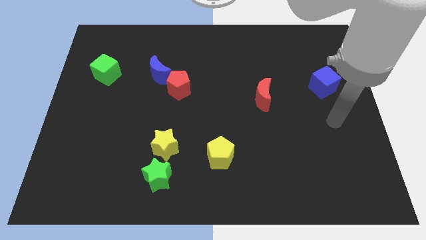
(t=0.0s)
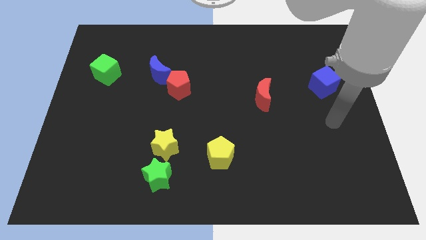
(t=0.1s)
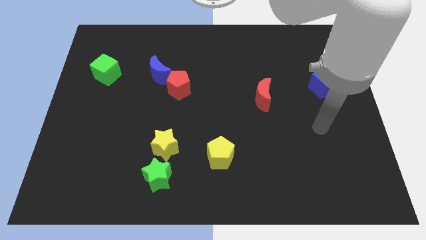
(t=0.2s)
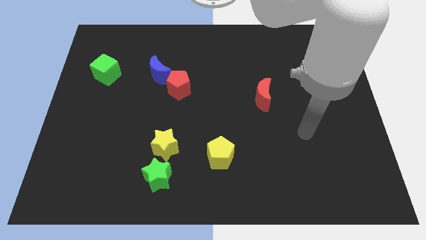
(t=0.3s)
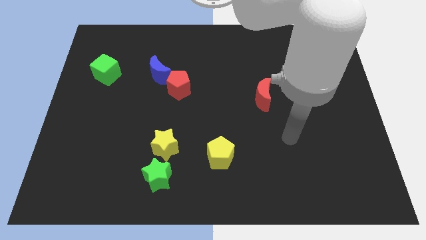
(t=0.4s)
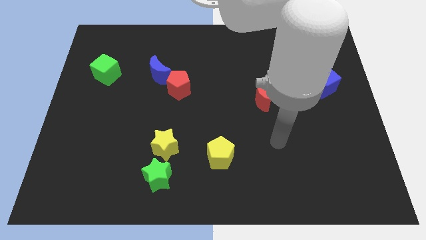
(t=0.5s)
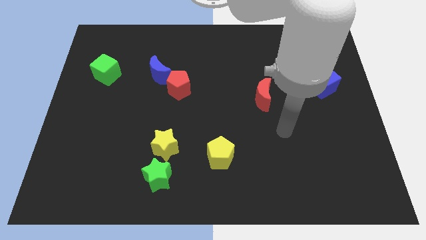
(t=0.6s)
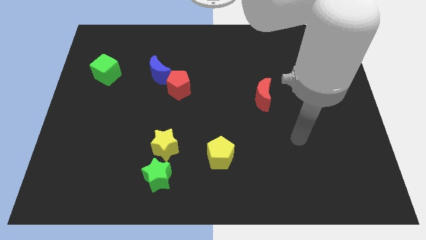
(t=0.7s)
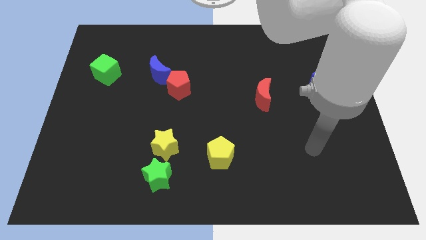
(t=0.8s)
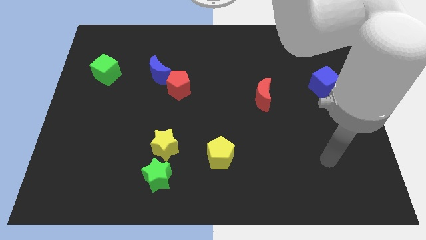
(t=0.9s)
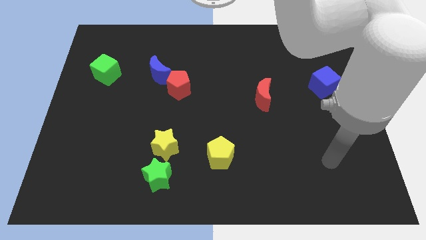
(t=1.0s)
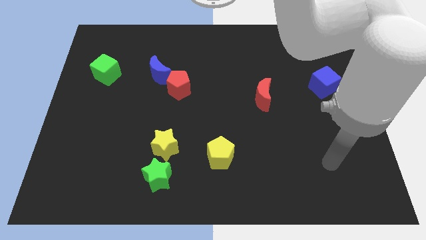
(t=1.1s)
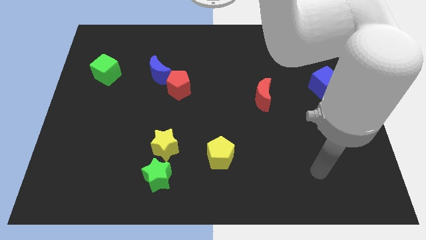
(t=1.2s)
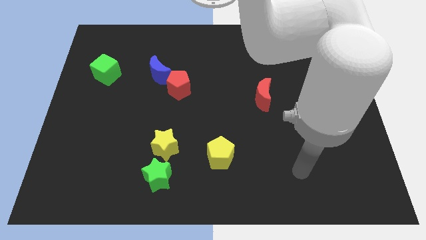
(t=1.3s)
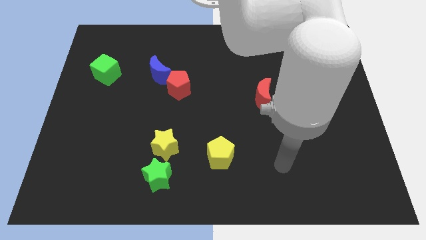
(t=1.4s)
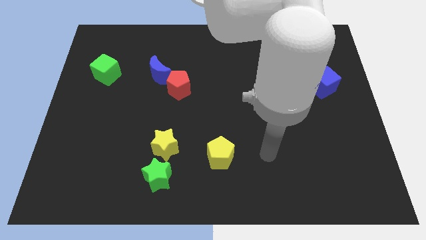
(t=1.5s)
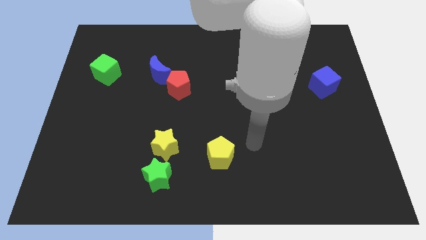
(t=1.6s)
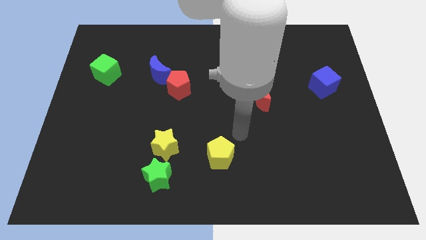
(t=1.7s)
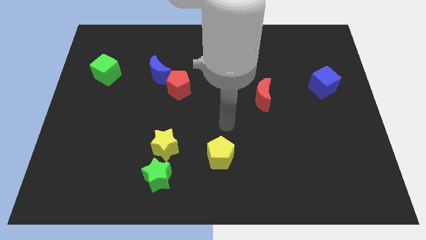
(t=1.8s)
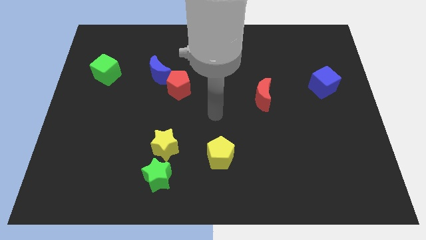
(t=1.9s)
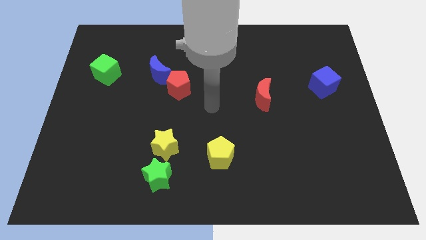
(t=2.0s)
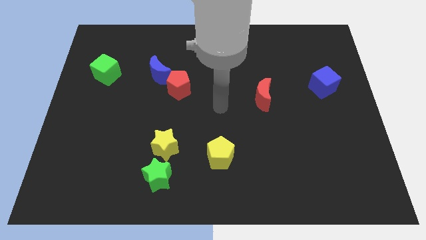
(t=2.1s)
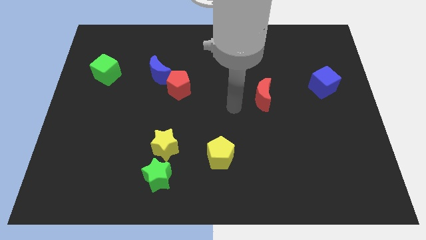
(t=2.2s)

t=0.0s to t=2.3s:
go and point your hand at the center of the board

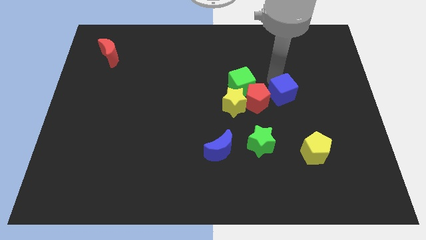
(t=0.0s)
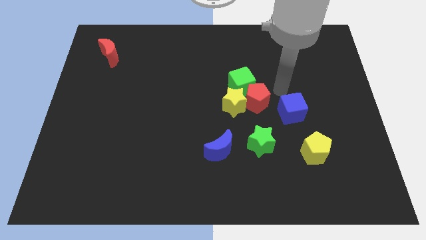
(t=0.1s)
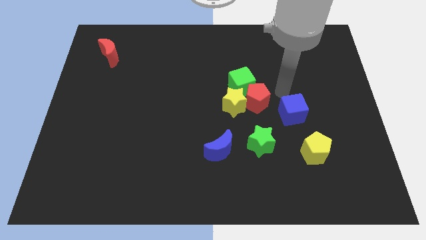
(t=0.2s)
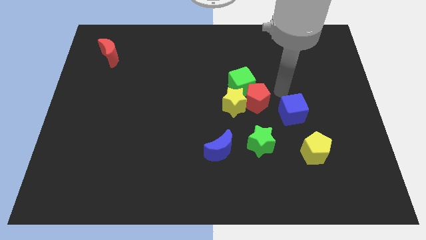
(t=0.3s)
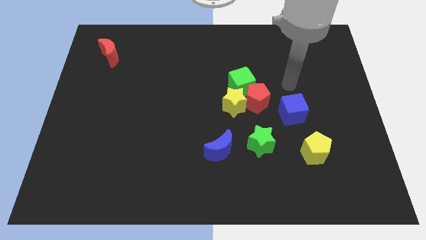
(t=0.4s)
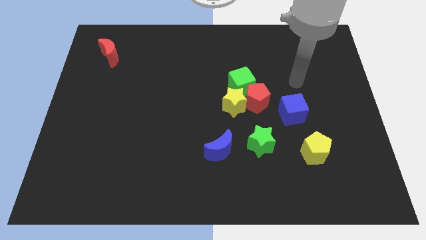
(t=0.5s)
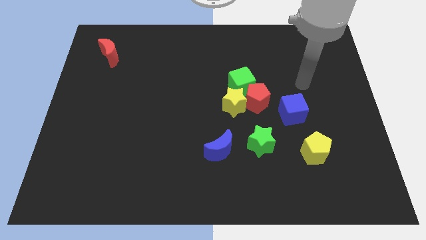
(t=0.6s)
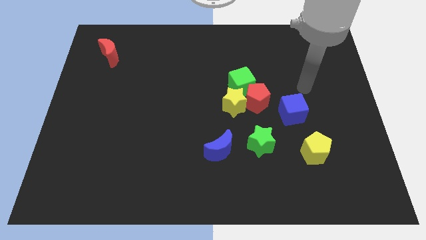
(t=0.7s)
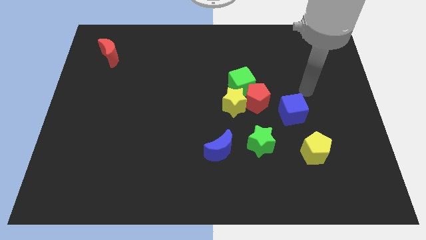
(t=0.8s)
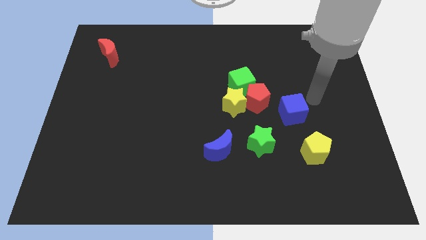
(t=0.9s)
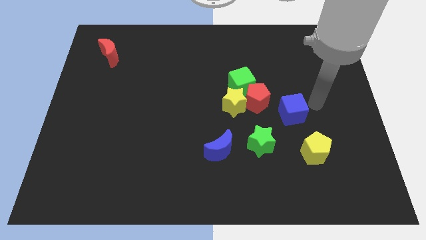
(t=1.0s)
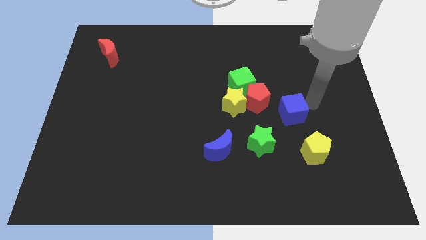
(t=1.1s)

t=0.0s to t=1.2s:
push the blue cube close to the green star

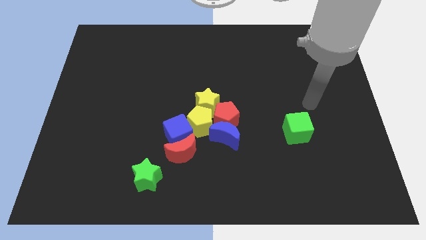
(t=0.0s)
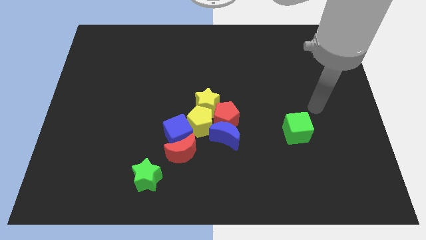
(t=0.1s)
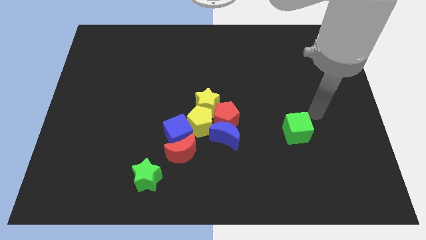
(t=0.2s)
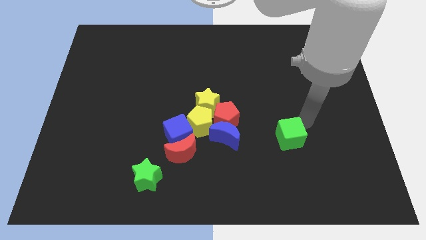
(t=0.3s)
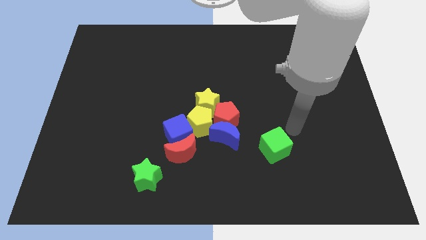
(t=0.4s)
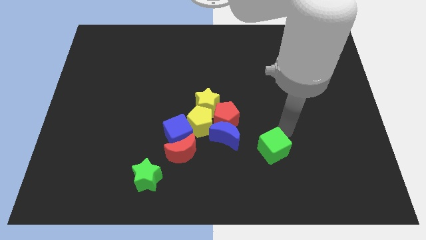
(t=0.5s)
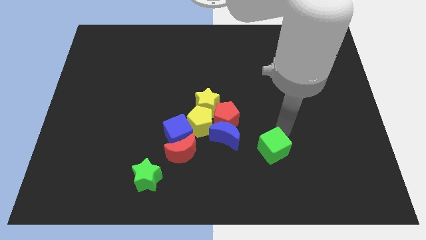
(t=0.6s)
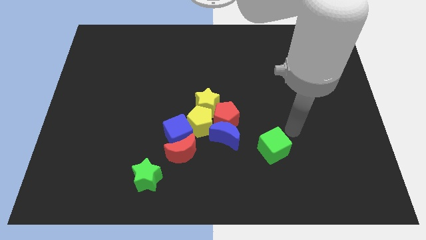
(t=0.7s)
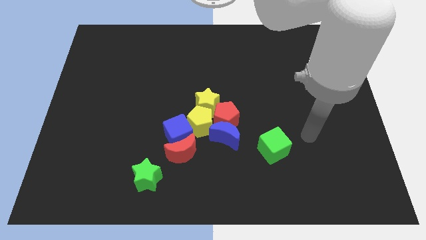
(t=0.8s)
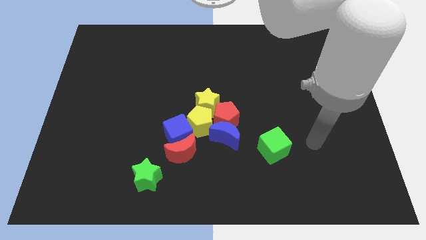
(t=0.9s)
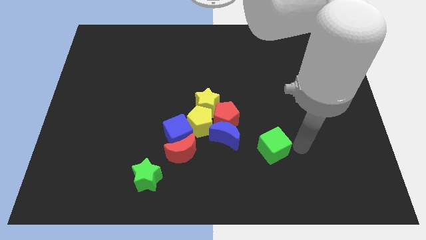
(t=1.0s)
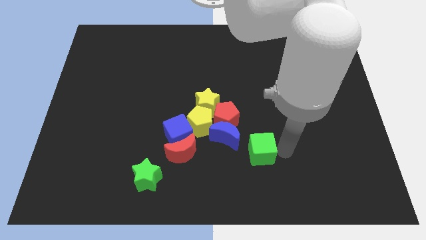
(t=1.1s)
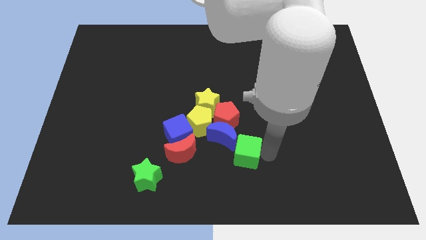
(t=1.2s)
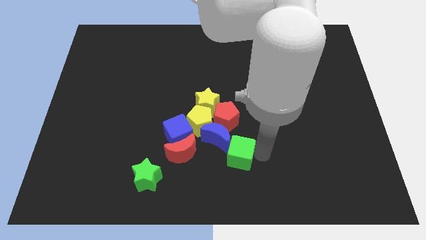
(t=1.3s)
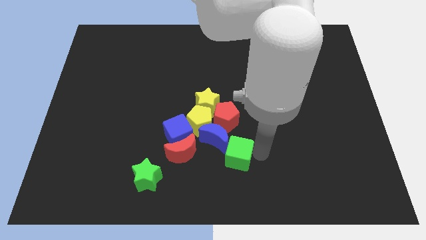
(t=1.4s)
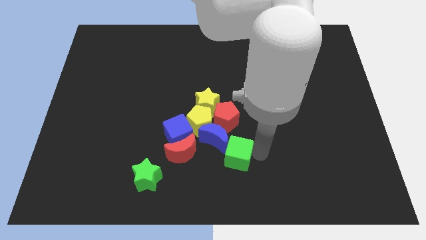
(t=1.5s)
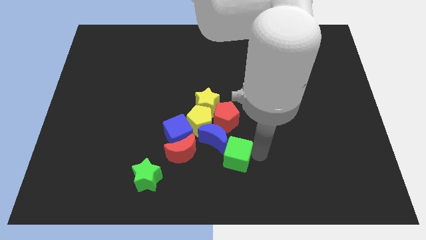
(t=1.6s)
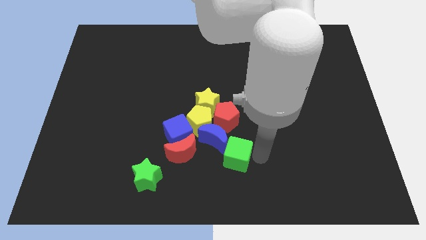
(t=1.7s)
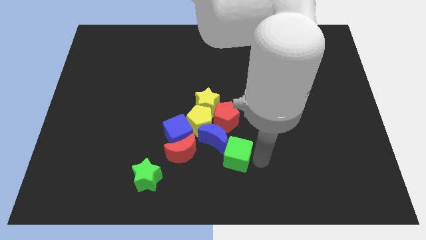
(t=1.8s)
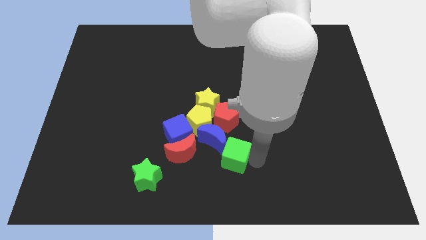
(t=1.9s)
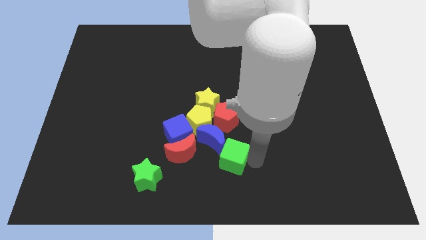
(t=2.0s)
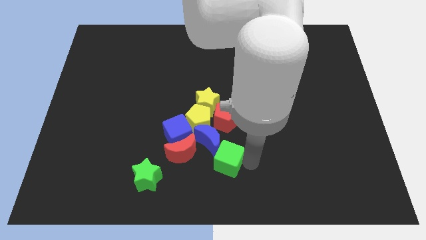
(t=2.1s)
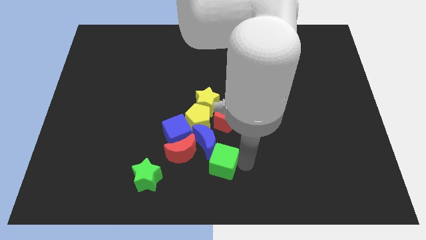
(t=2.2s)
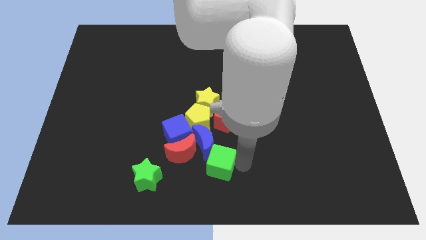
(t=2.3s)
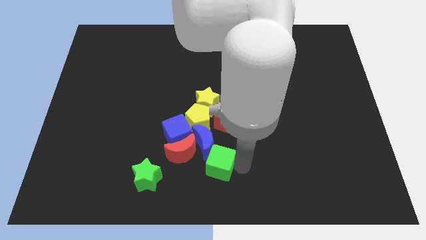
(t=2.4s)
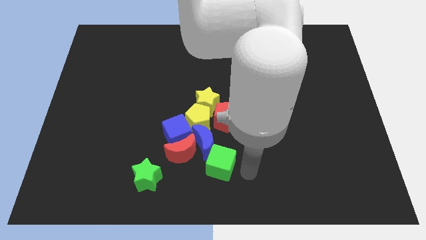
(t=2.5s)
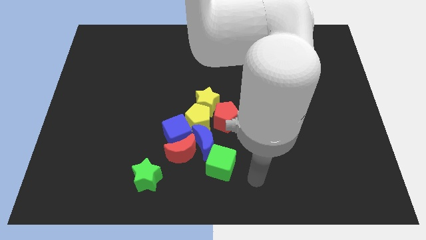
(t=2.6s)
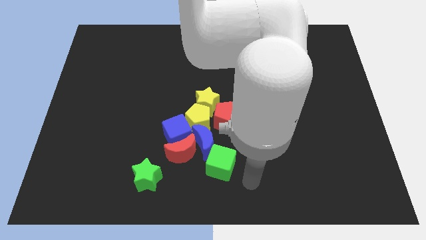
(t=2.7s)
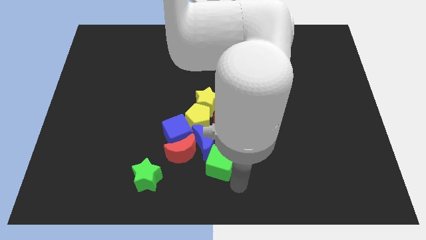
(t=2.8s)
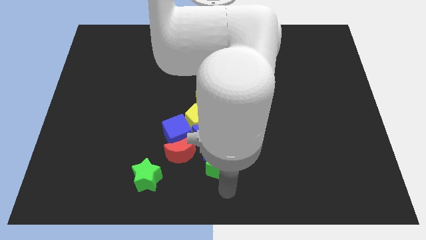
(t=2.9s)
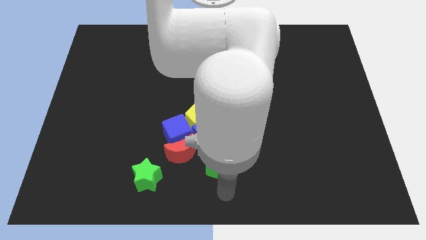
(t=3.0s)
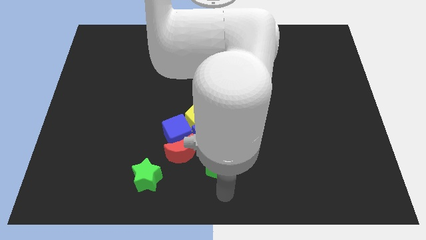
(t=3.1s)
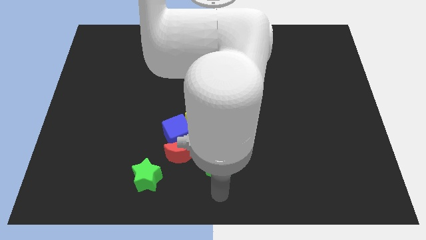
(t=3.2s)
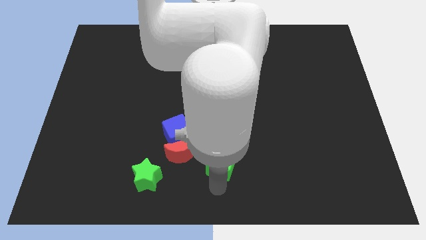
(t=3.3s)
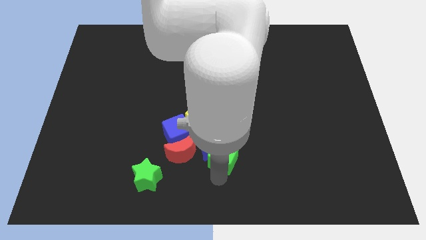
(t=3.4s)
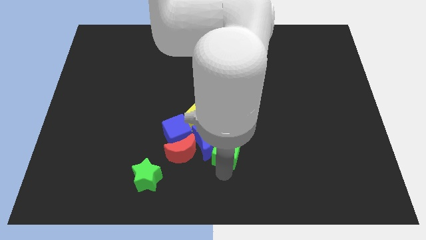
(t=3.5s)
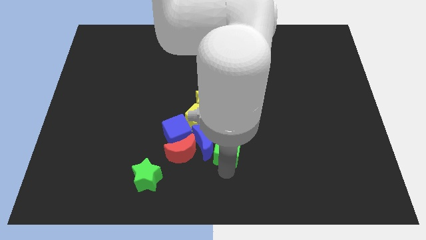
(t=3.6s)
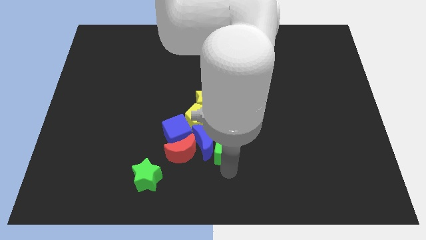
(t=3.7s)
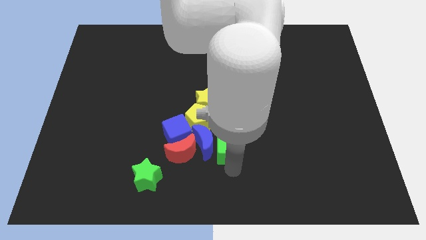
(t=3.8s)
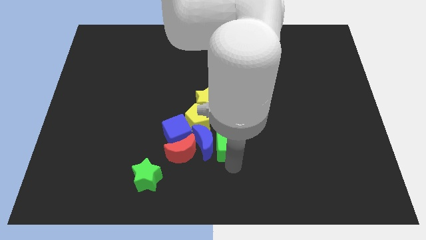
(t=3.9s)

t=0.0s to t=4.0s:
slide the green cube to the right of the blue moon

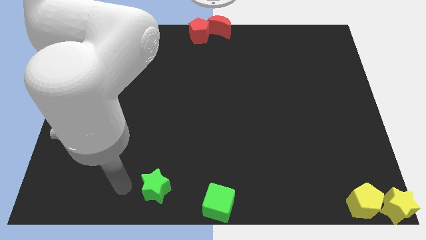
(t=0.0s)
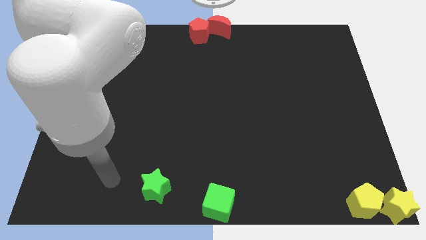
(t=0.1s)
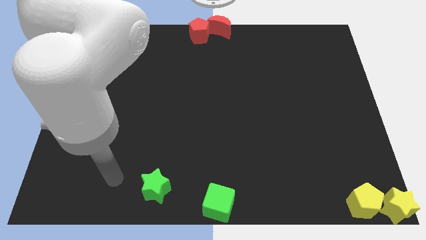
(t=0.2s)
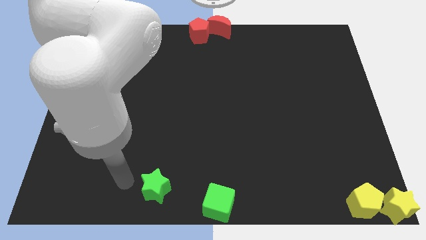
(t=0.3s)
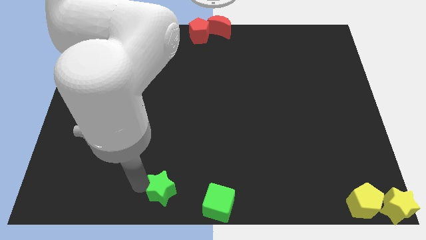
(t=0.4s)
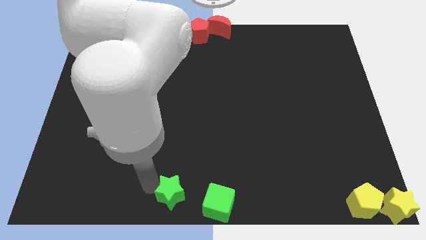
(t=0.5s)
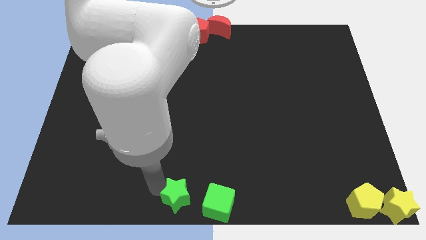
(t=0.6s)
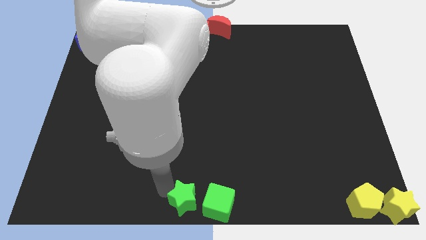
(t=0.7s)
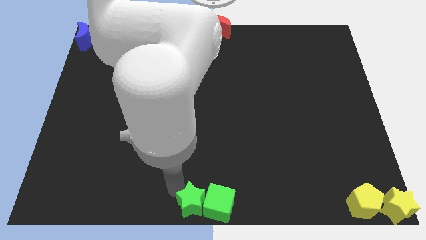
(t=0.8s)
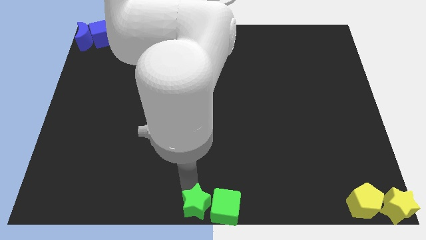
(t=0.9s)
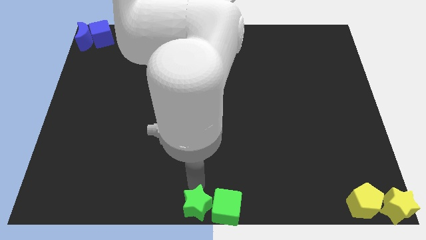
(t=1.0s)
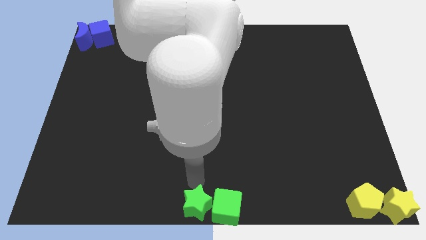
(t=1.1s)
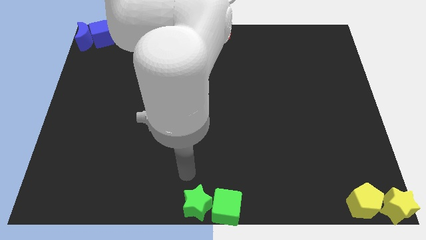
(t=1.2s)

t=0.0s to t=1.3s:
push the star to the left of the green cube

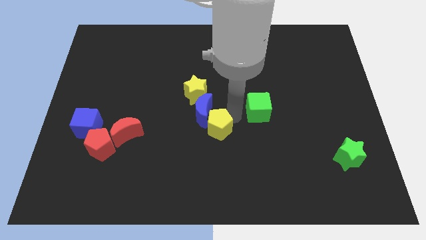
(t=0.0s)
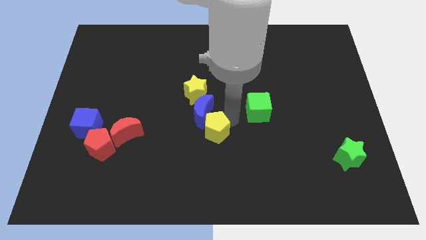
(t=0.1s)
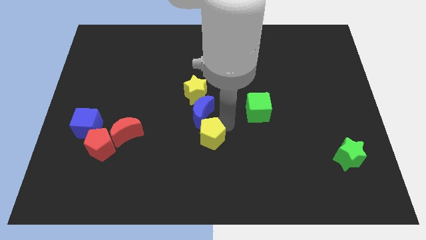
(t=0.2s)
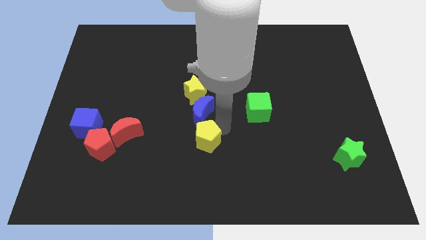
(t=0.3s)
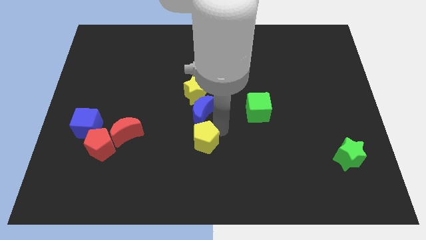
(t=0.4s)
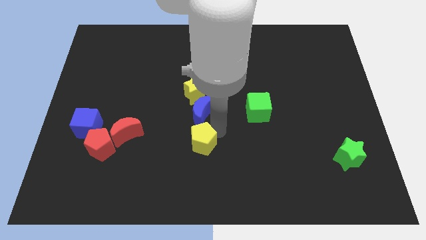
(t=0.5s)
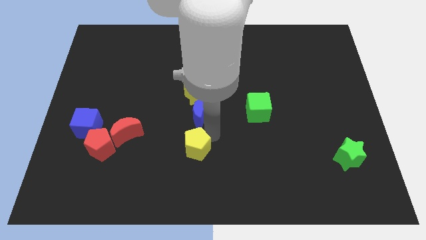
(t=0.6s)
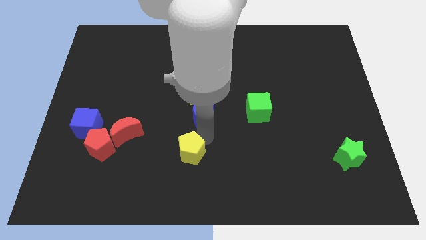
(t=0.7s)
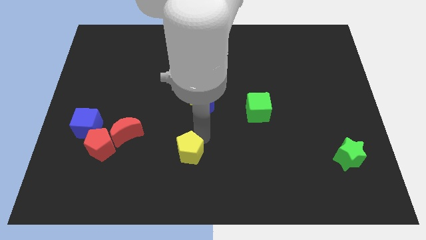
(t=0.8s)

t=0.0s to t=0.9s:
push the yellow pentagon downward
